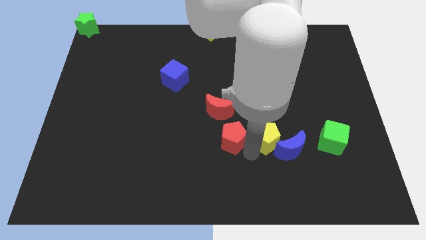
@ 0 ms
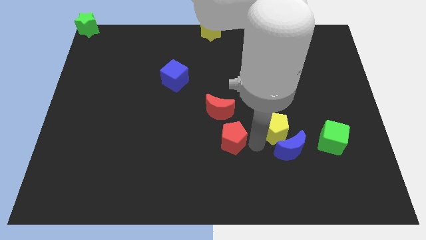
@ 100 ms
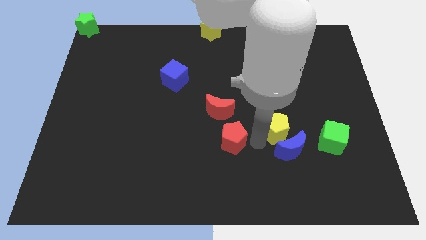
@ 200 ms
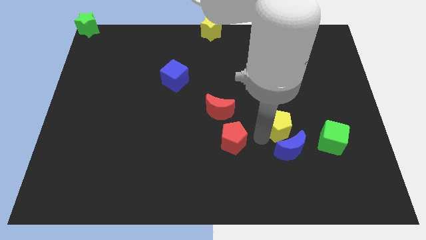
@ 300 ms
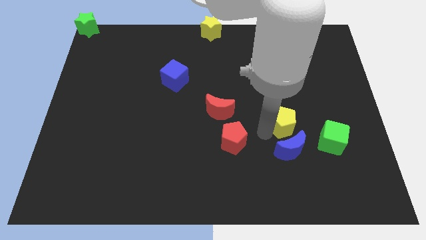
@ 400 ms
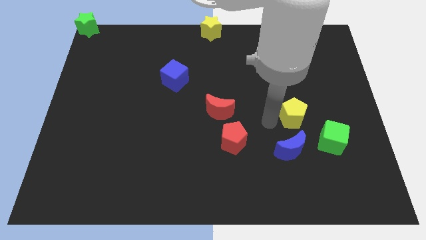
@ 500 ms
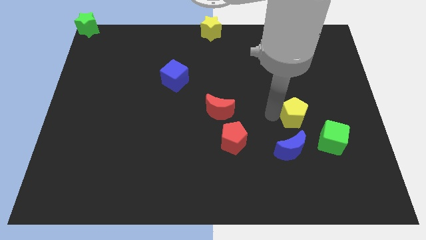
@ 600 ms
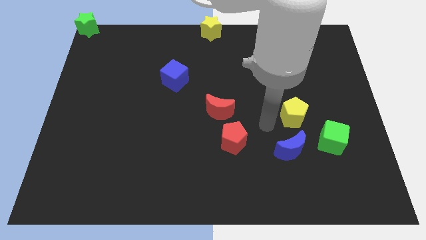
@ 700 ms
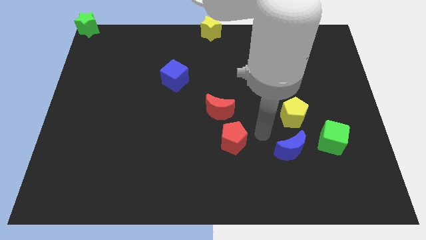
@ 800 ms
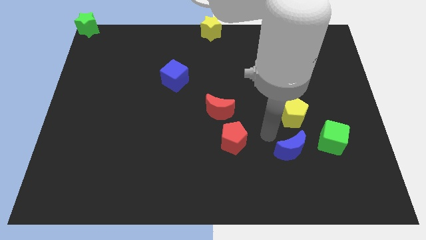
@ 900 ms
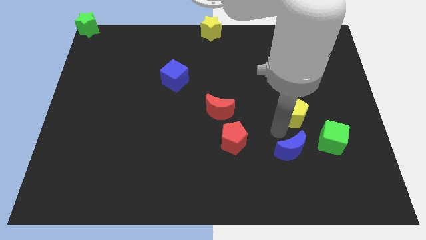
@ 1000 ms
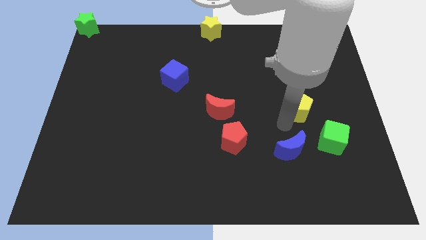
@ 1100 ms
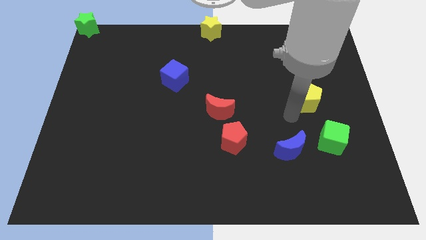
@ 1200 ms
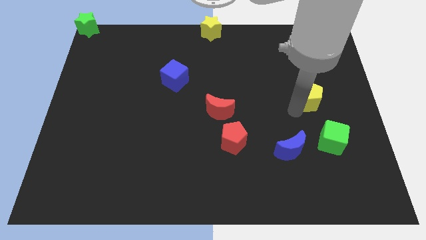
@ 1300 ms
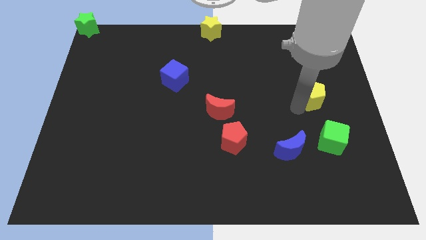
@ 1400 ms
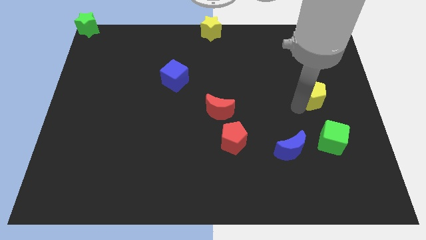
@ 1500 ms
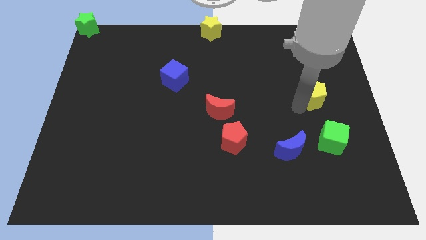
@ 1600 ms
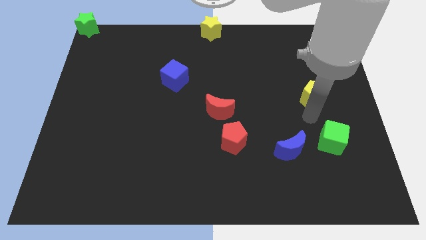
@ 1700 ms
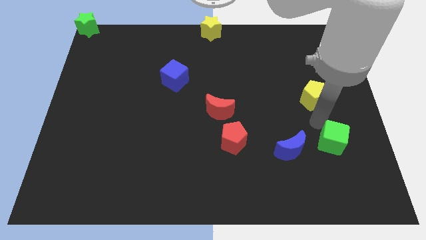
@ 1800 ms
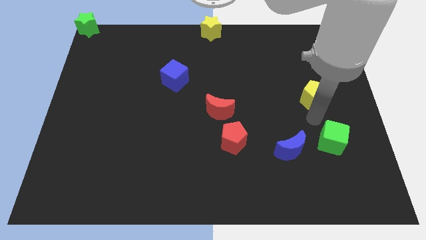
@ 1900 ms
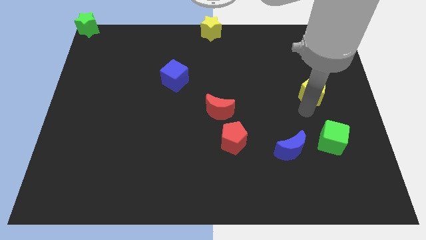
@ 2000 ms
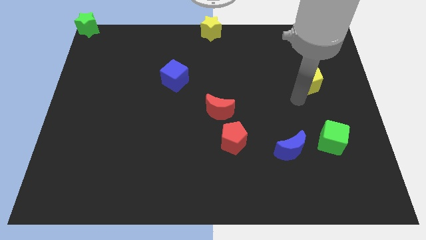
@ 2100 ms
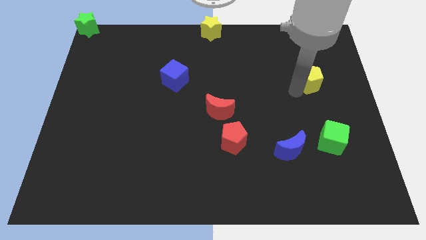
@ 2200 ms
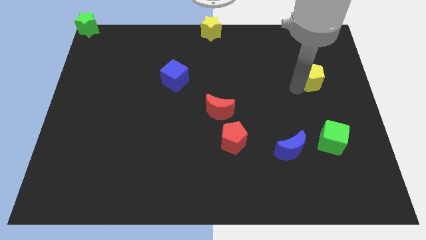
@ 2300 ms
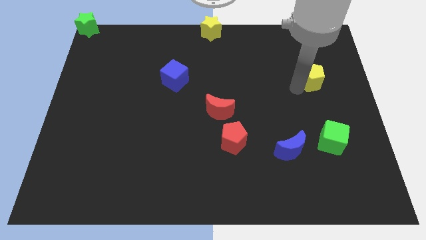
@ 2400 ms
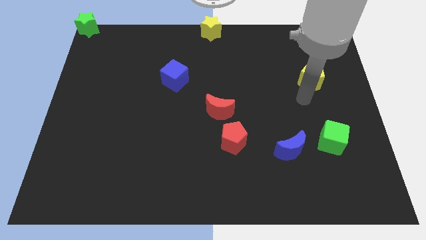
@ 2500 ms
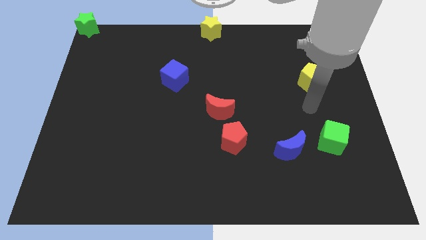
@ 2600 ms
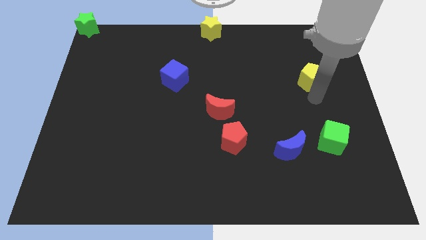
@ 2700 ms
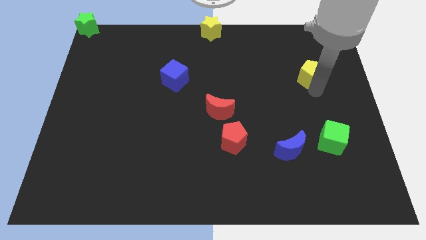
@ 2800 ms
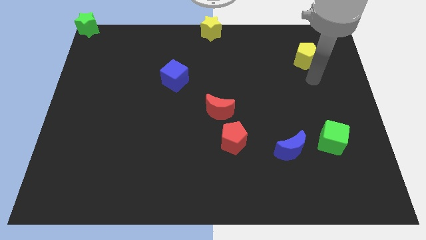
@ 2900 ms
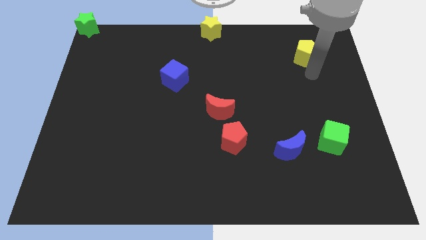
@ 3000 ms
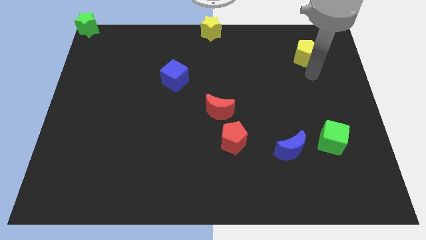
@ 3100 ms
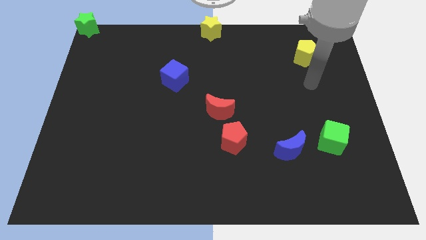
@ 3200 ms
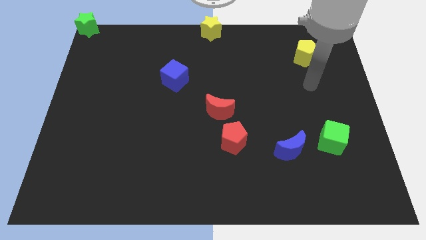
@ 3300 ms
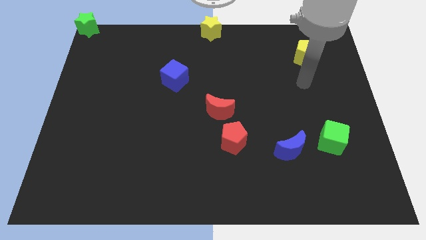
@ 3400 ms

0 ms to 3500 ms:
place the yellow pentagon above the blue moon

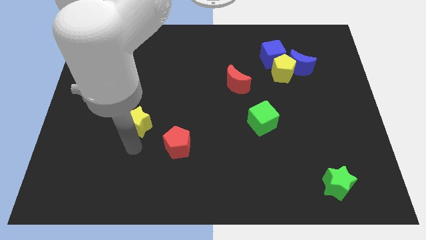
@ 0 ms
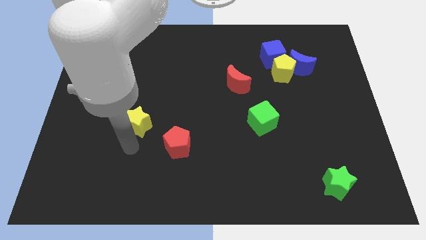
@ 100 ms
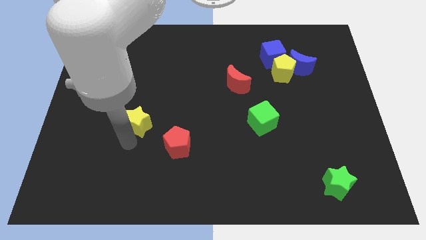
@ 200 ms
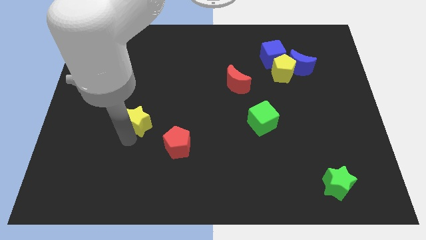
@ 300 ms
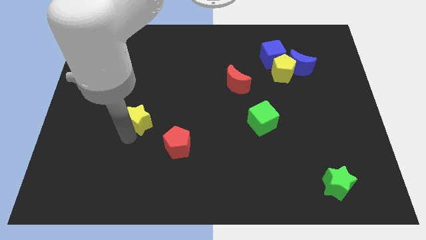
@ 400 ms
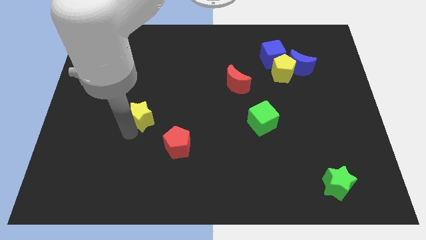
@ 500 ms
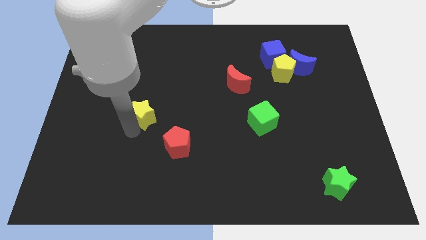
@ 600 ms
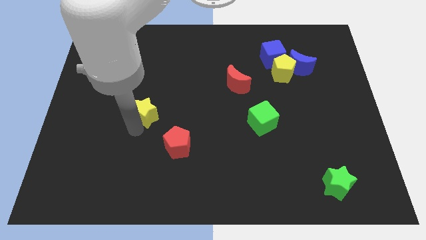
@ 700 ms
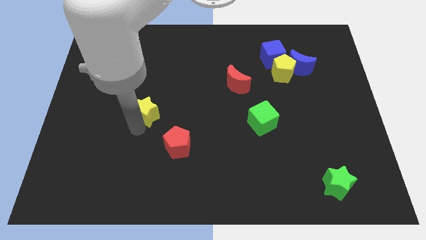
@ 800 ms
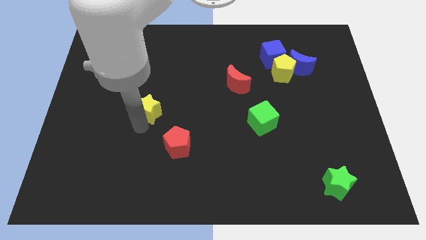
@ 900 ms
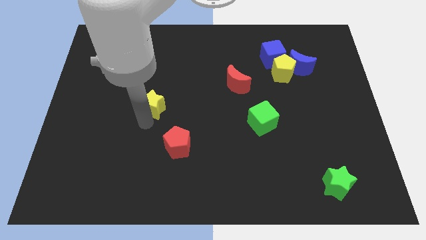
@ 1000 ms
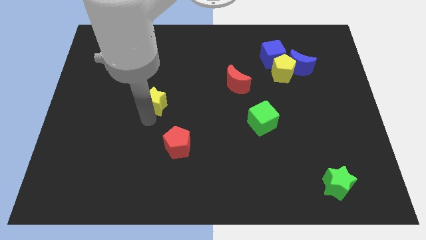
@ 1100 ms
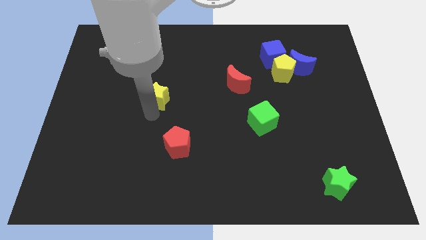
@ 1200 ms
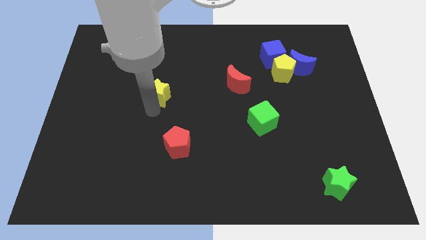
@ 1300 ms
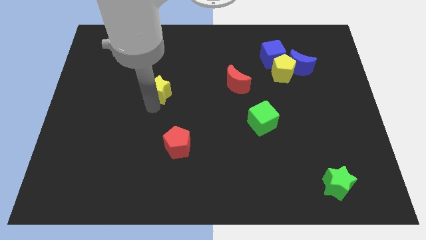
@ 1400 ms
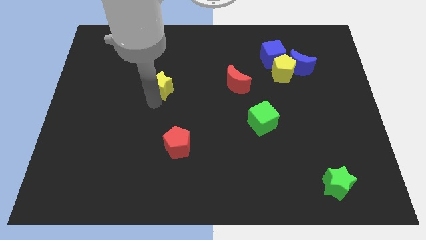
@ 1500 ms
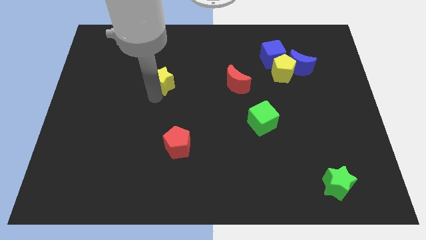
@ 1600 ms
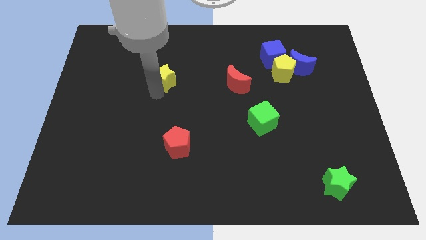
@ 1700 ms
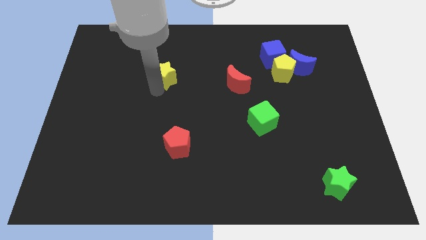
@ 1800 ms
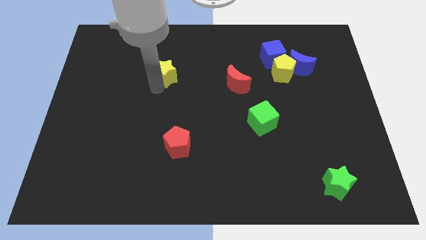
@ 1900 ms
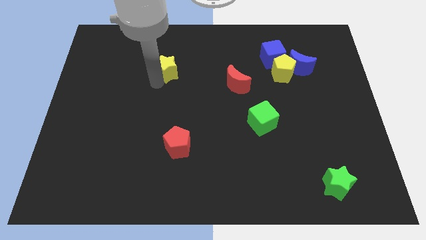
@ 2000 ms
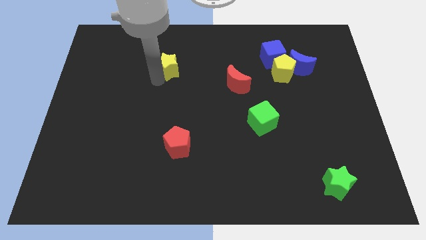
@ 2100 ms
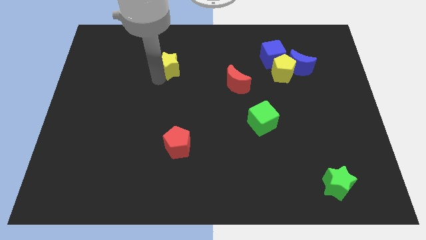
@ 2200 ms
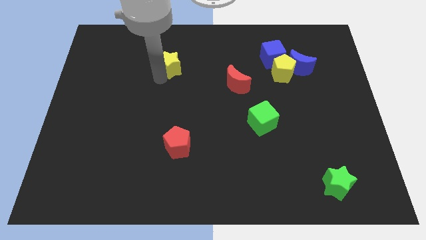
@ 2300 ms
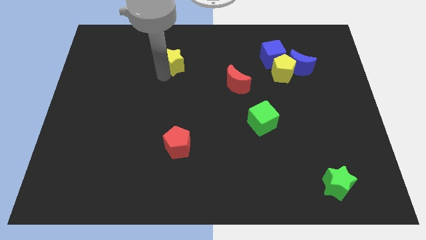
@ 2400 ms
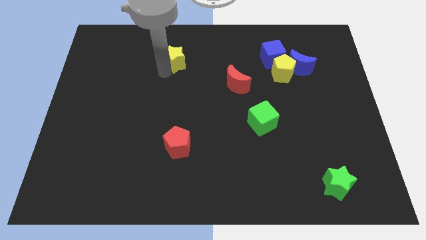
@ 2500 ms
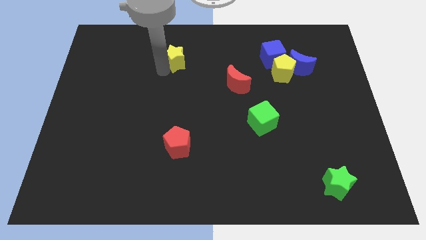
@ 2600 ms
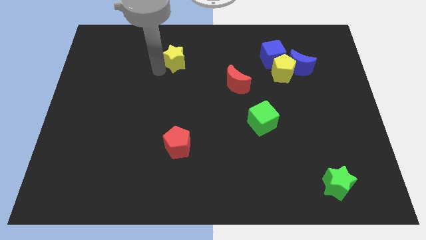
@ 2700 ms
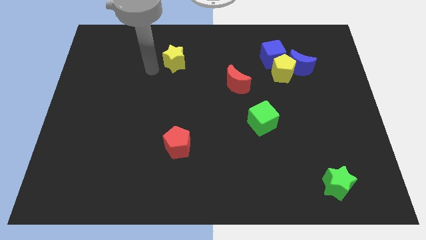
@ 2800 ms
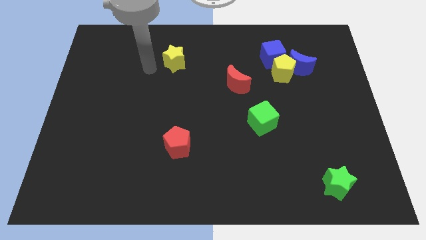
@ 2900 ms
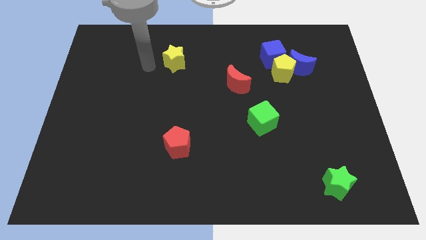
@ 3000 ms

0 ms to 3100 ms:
put the yellow star vertically above the red pentagon

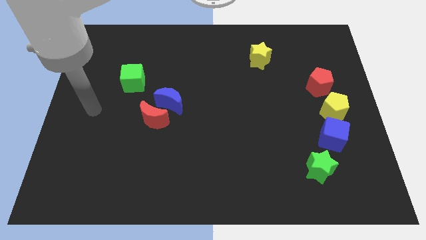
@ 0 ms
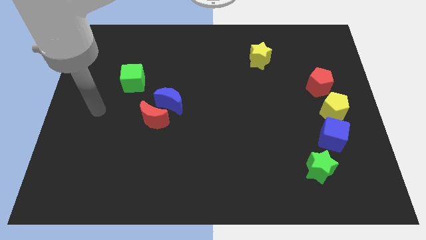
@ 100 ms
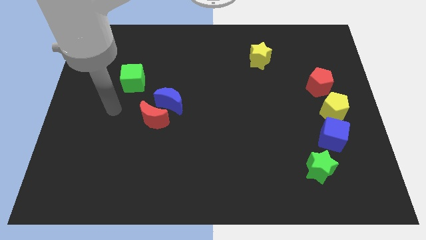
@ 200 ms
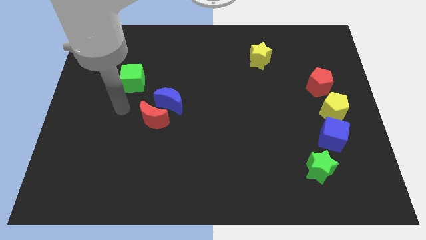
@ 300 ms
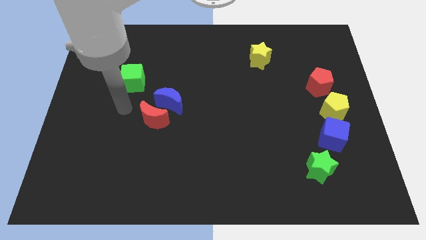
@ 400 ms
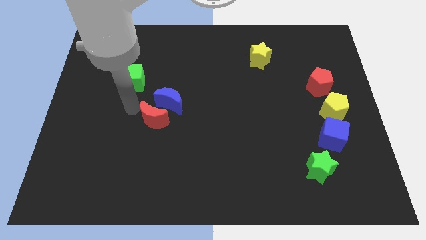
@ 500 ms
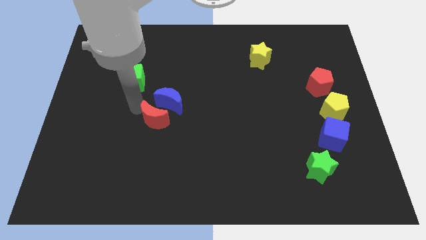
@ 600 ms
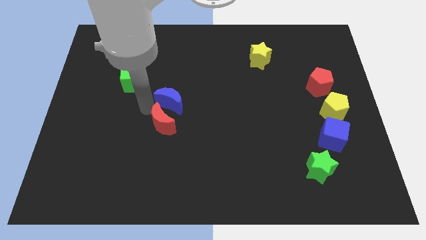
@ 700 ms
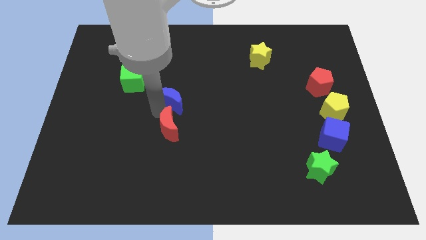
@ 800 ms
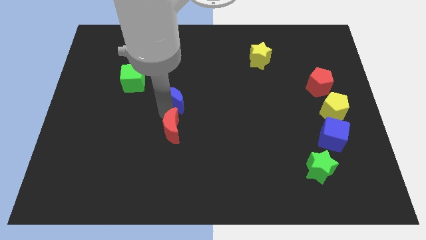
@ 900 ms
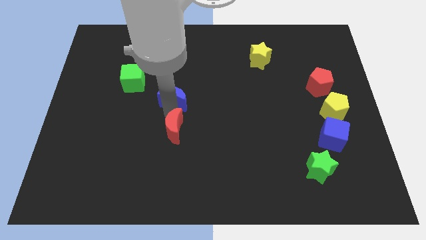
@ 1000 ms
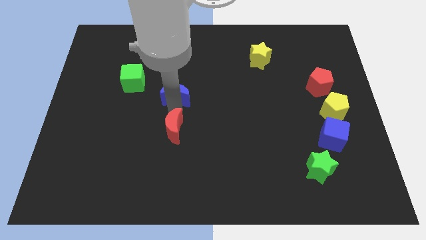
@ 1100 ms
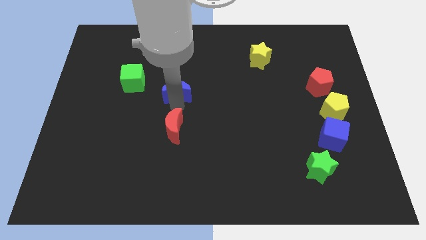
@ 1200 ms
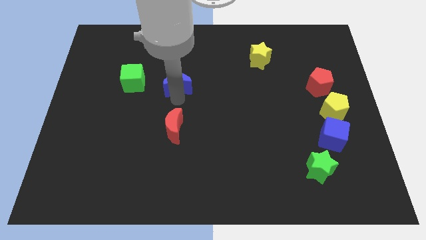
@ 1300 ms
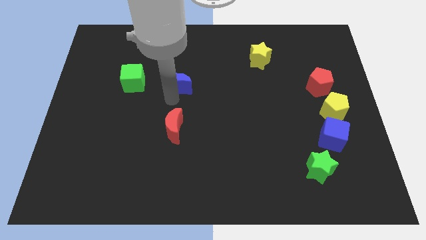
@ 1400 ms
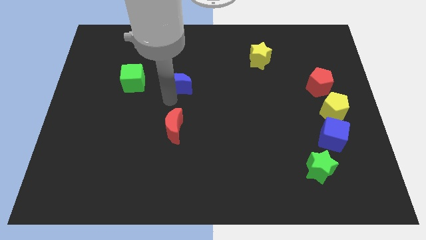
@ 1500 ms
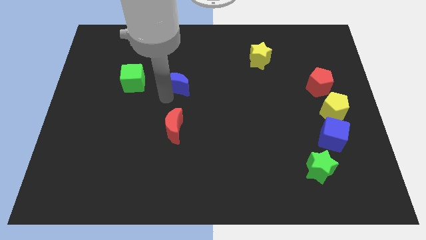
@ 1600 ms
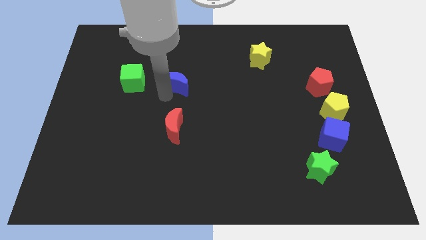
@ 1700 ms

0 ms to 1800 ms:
separate the red crescent and blue crescent

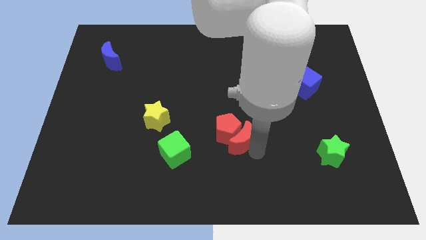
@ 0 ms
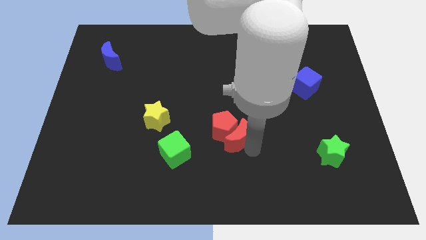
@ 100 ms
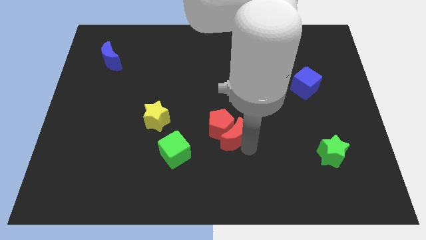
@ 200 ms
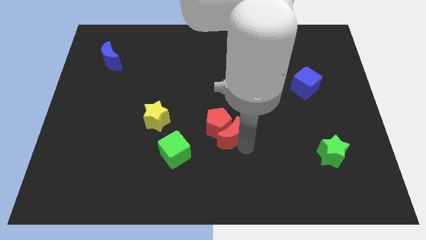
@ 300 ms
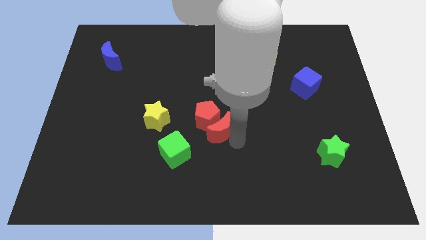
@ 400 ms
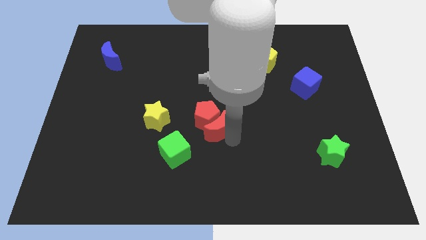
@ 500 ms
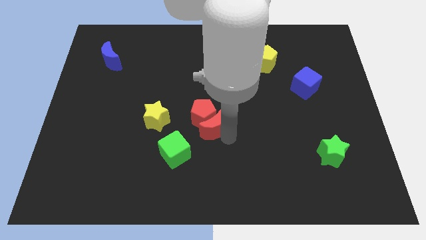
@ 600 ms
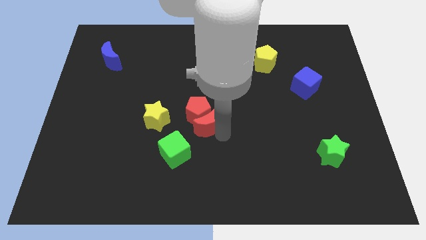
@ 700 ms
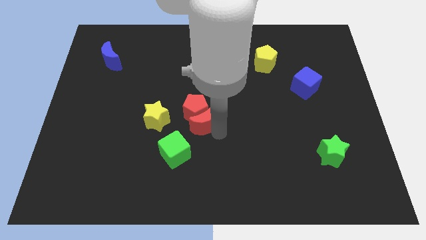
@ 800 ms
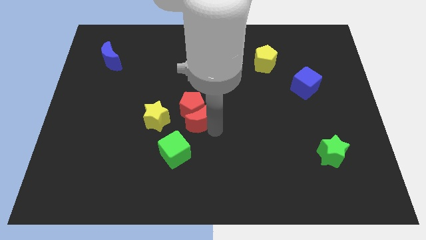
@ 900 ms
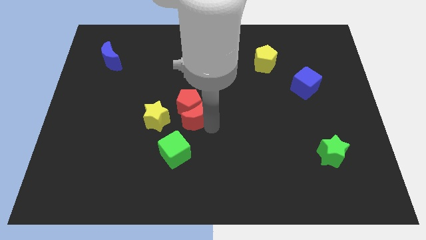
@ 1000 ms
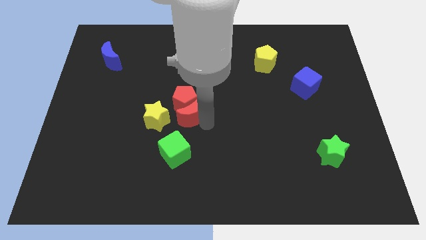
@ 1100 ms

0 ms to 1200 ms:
move the red blocks to the center
